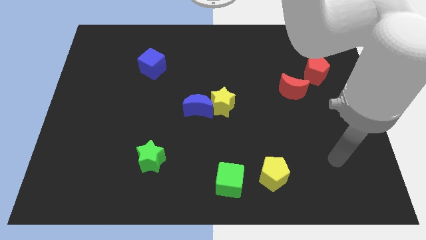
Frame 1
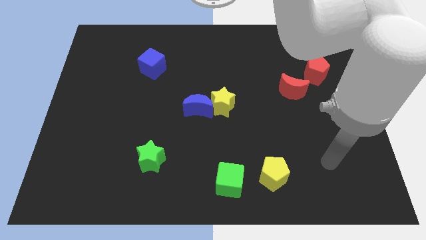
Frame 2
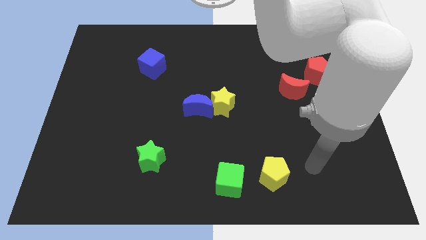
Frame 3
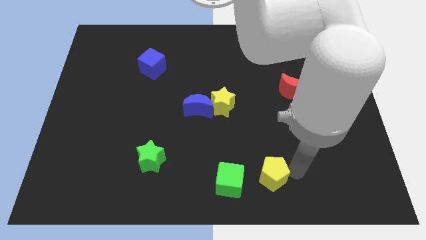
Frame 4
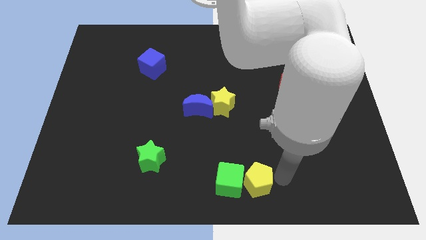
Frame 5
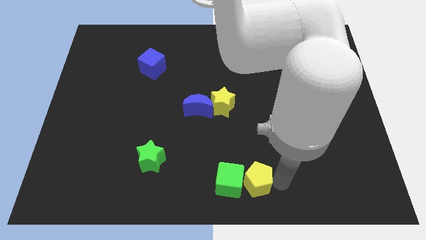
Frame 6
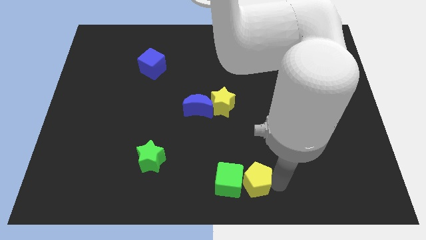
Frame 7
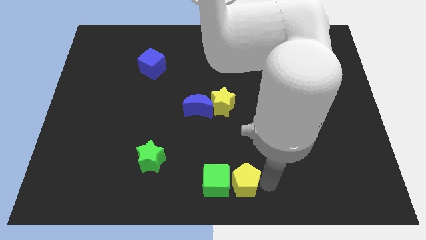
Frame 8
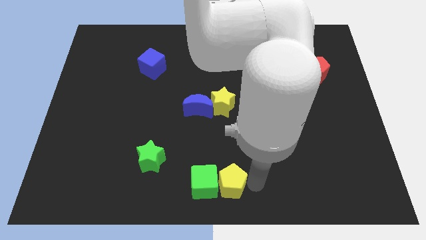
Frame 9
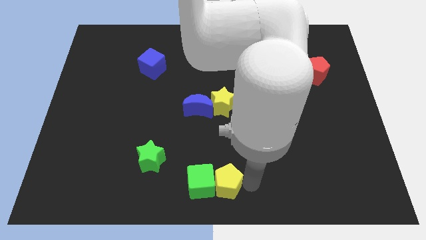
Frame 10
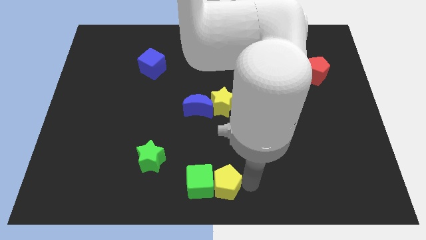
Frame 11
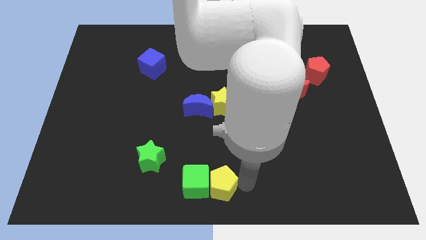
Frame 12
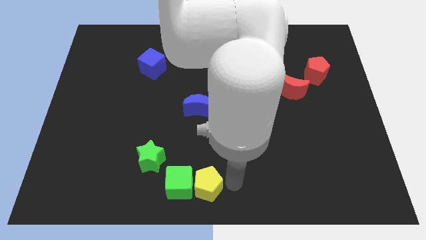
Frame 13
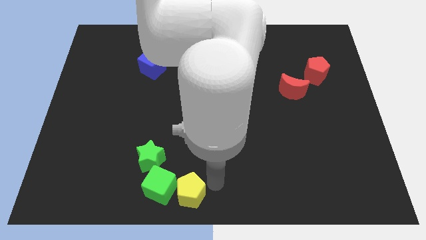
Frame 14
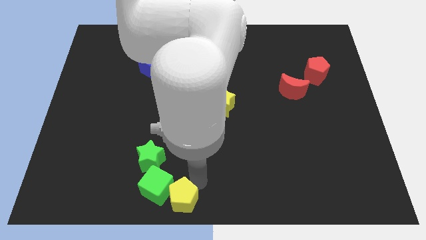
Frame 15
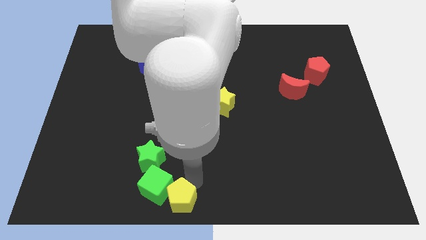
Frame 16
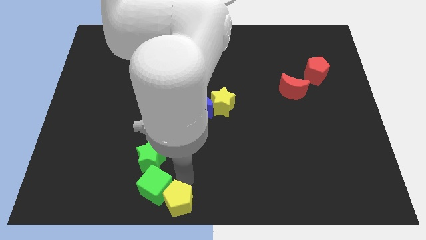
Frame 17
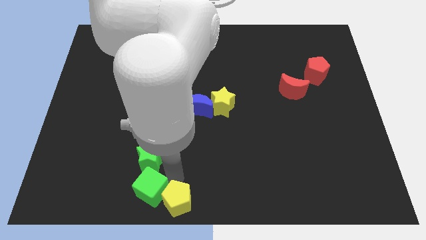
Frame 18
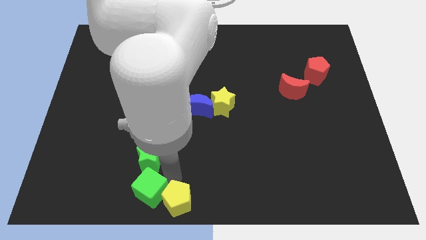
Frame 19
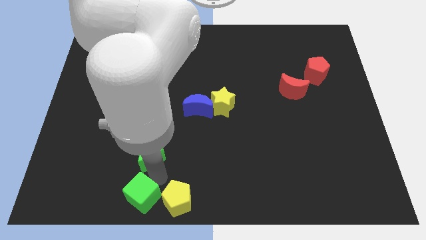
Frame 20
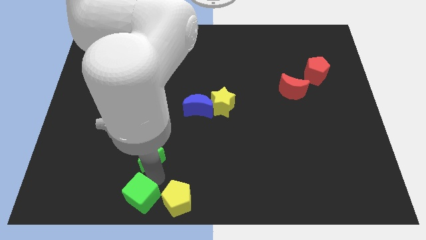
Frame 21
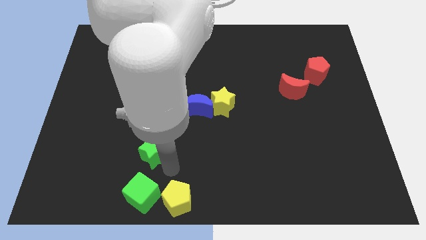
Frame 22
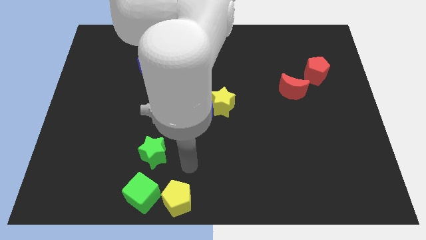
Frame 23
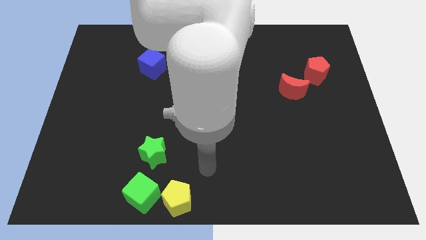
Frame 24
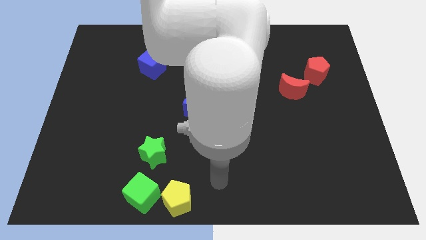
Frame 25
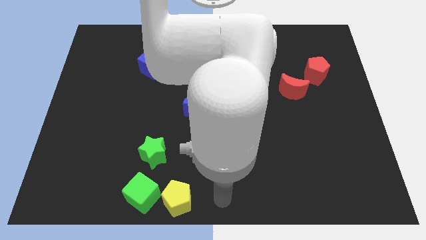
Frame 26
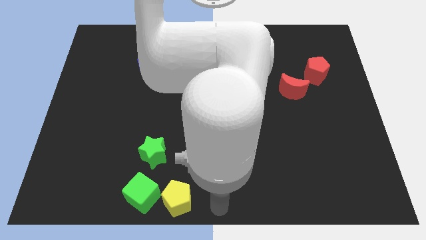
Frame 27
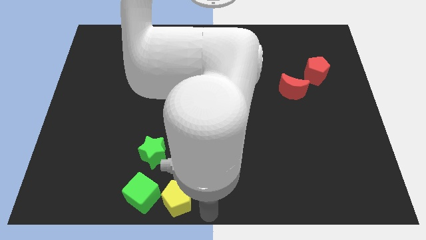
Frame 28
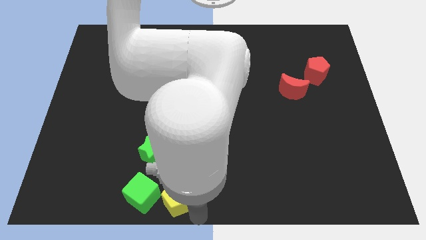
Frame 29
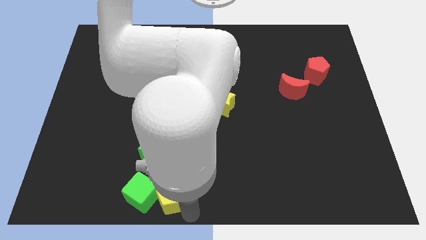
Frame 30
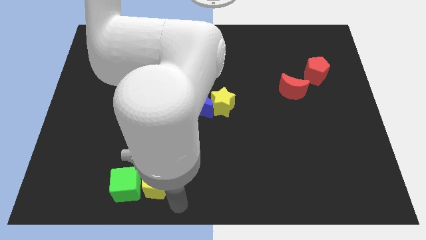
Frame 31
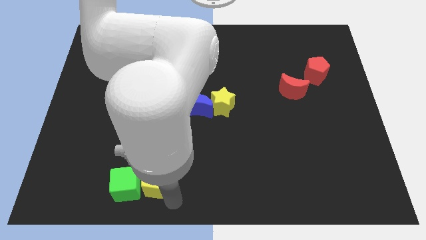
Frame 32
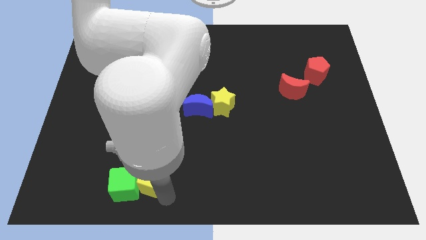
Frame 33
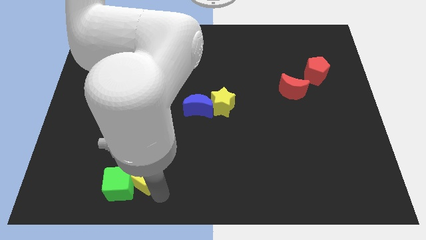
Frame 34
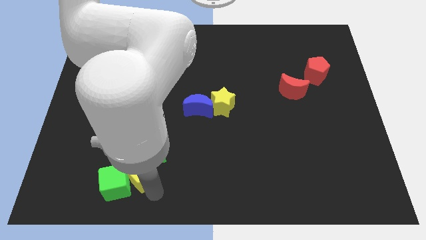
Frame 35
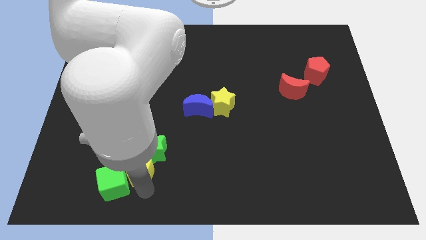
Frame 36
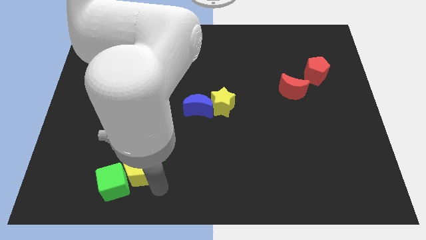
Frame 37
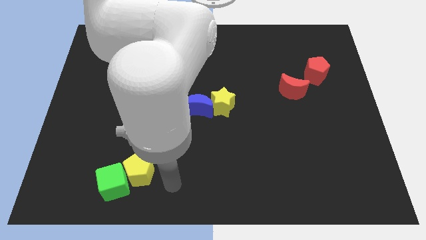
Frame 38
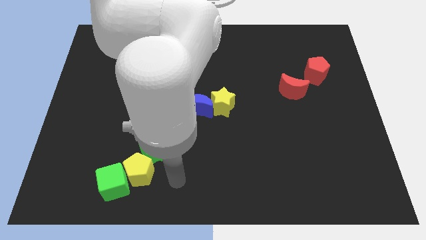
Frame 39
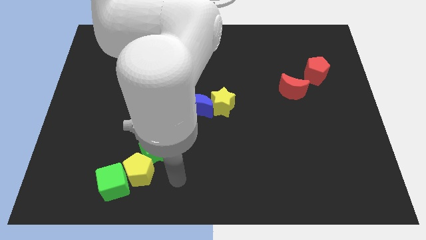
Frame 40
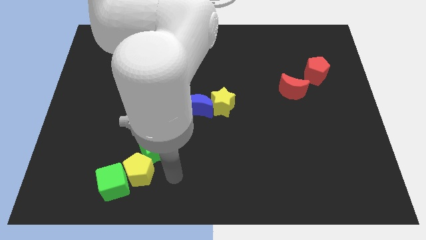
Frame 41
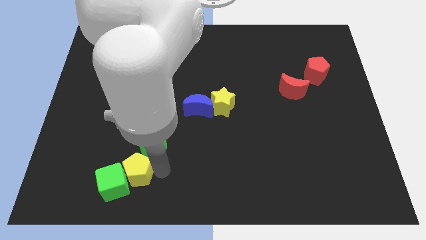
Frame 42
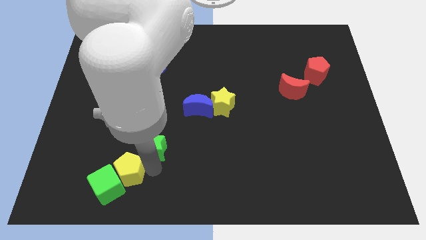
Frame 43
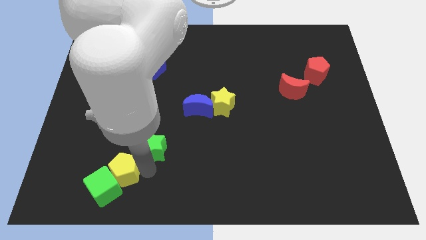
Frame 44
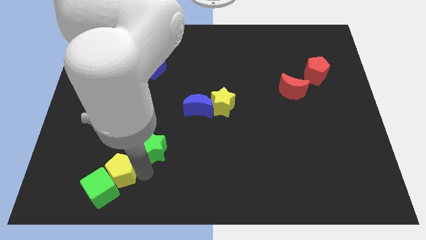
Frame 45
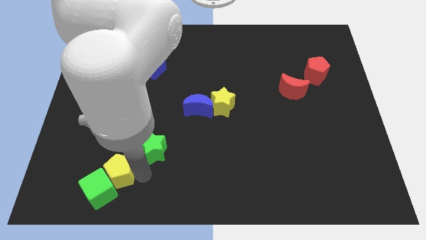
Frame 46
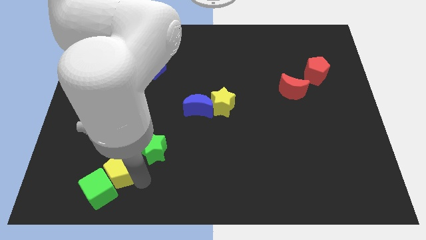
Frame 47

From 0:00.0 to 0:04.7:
move the yellow pentagon and green cube to the bottom left side of the green star

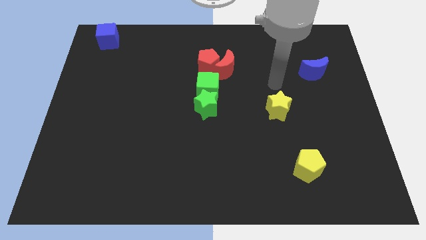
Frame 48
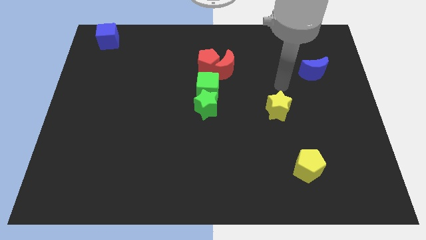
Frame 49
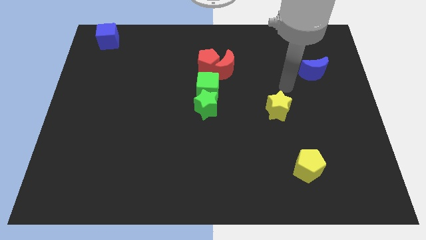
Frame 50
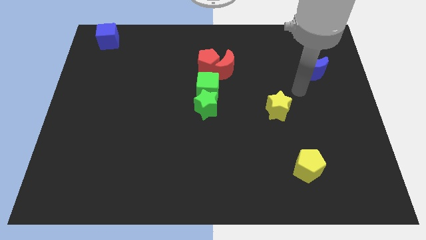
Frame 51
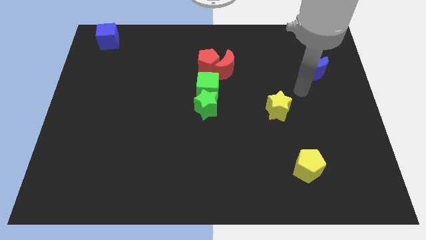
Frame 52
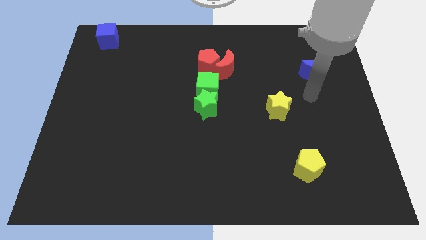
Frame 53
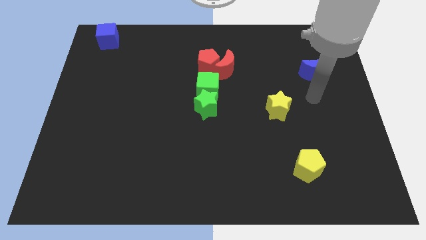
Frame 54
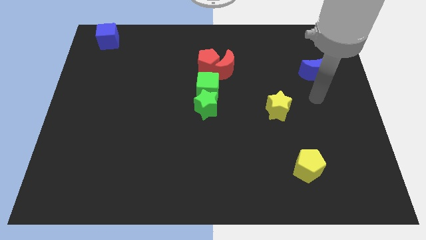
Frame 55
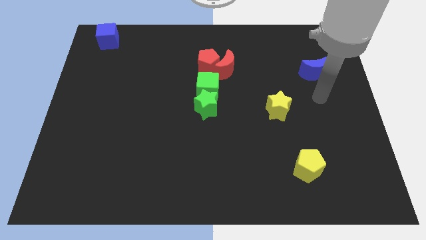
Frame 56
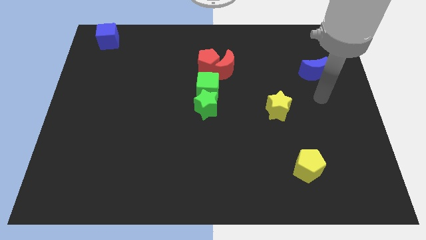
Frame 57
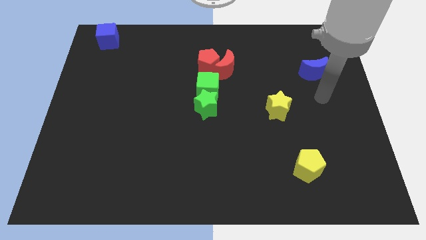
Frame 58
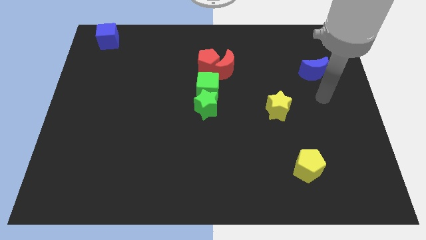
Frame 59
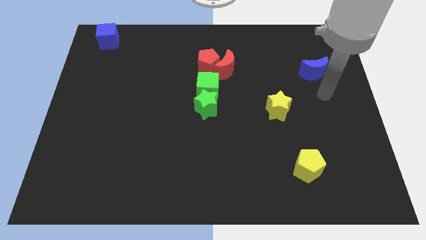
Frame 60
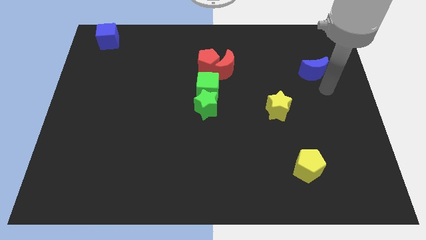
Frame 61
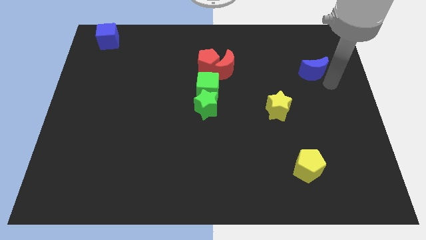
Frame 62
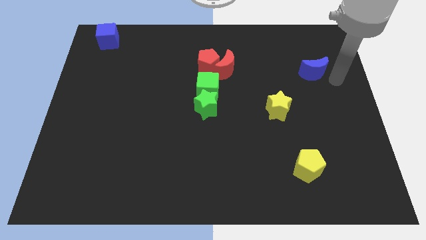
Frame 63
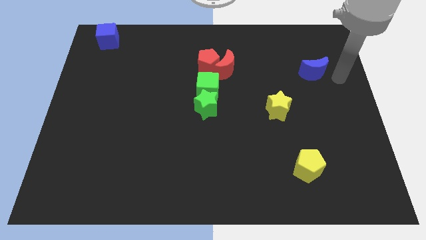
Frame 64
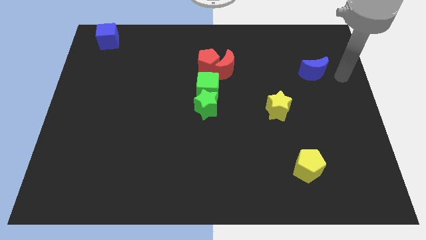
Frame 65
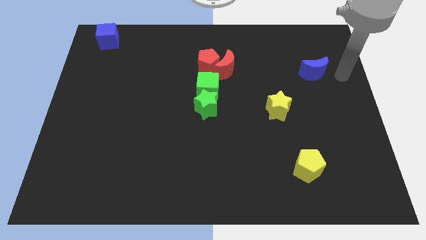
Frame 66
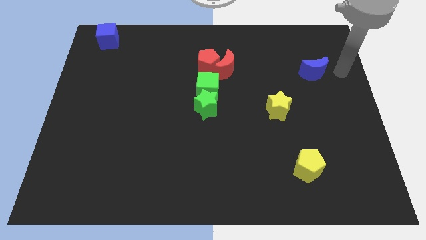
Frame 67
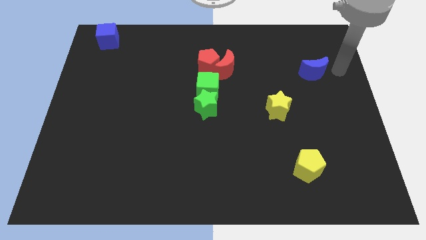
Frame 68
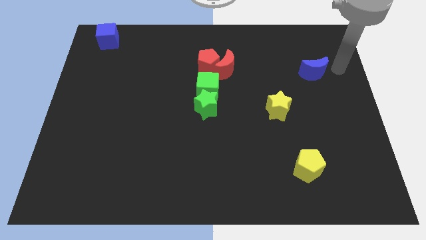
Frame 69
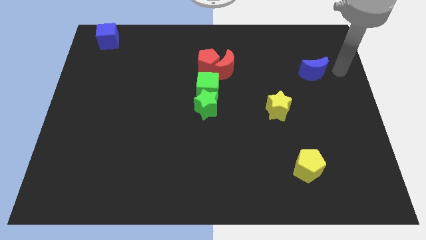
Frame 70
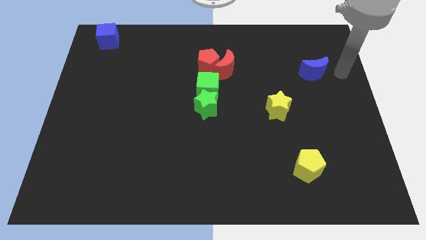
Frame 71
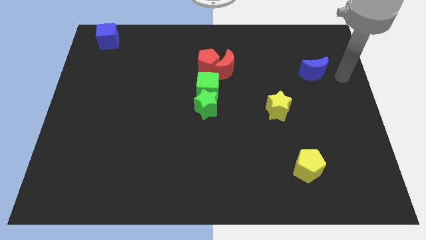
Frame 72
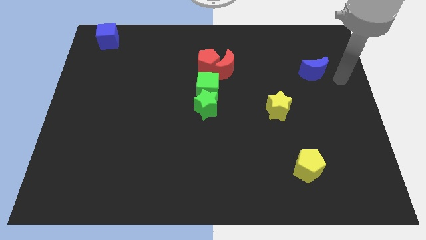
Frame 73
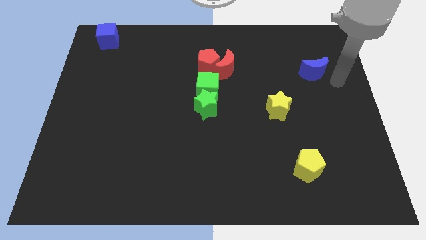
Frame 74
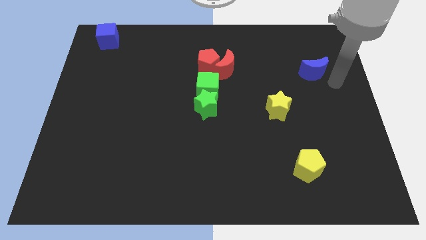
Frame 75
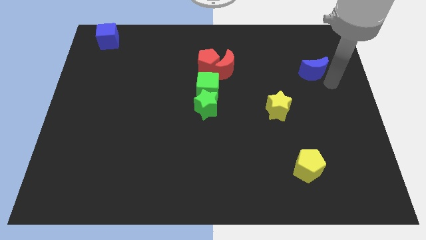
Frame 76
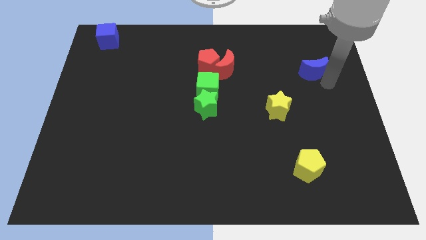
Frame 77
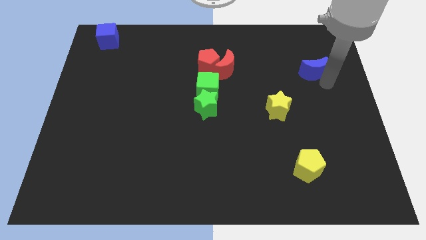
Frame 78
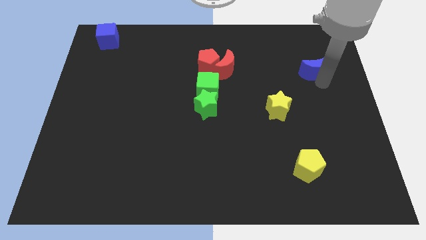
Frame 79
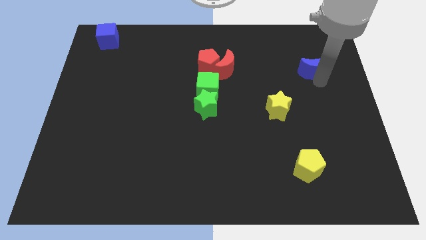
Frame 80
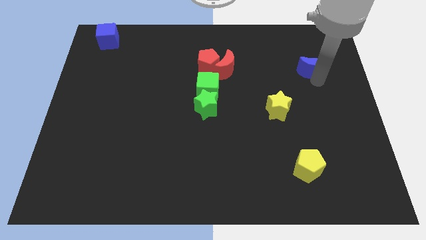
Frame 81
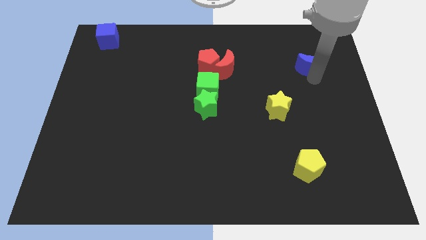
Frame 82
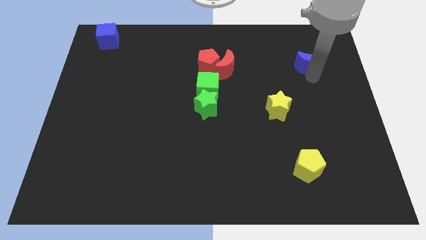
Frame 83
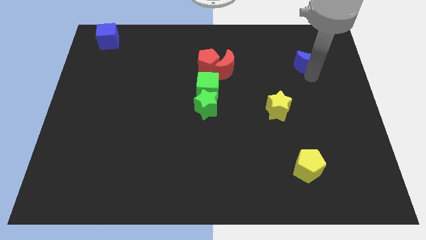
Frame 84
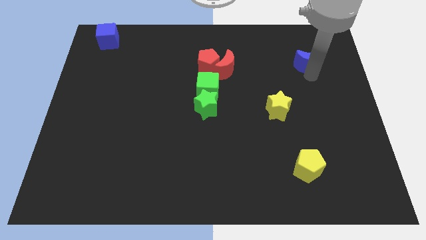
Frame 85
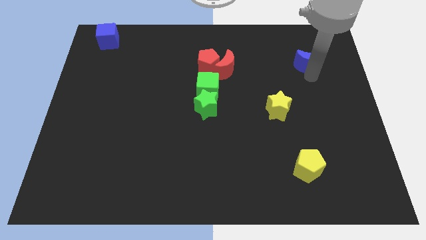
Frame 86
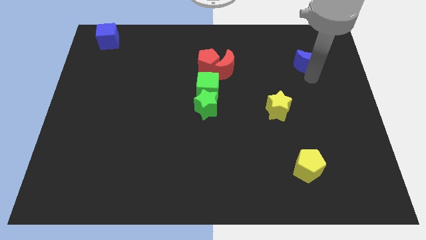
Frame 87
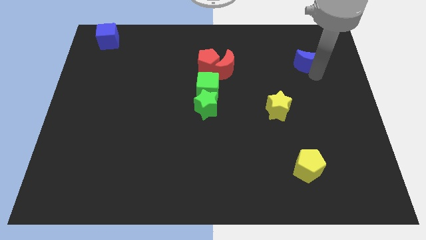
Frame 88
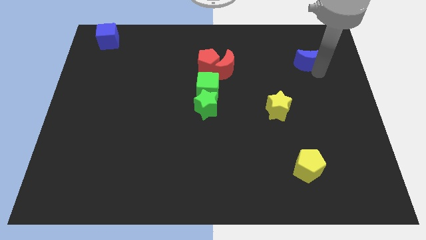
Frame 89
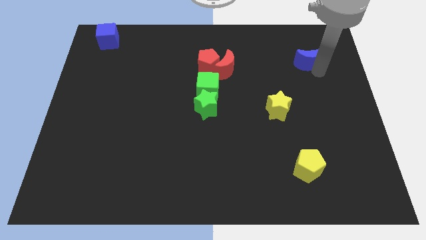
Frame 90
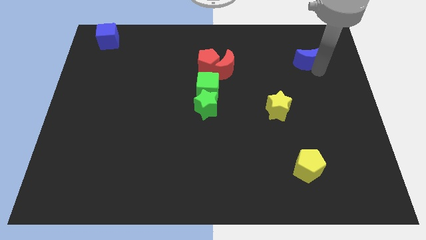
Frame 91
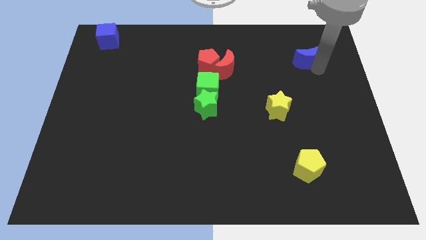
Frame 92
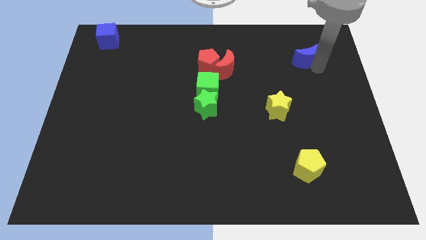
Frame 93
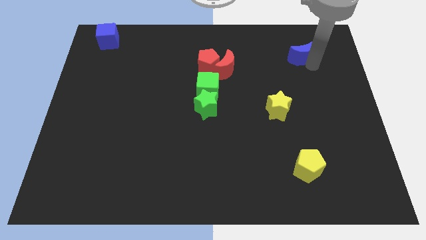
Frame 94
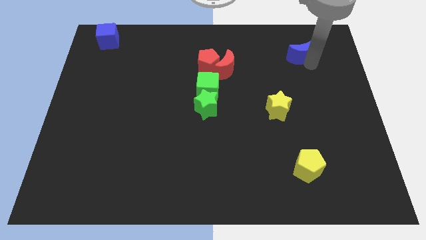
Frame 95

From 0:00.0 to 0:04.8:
push the blue crescent slightly towards up
